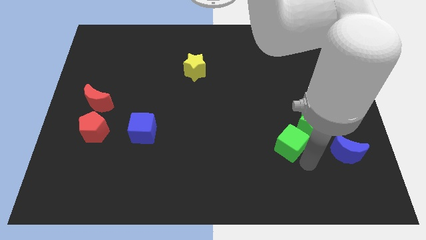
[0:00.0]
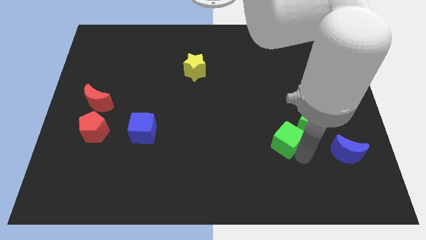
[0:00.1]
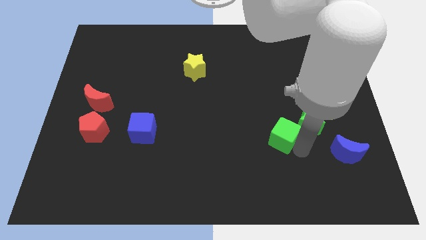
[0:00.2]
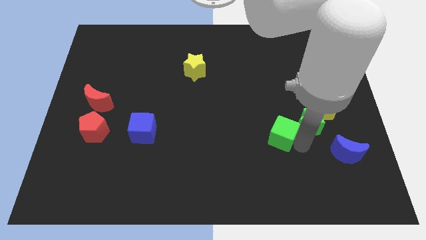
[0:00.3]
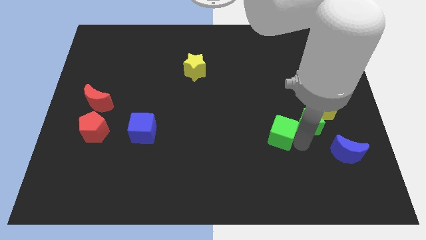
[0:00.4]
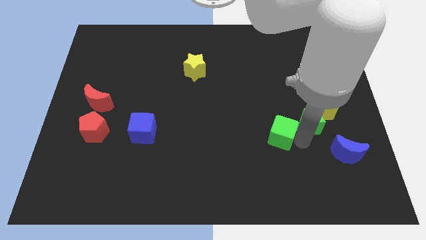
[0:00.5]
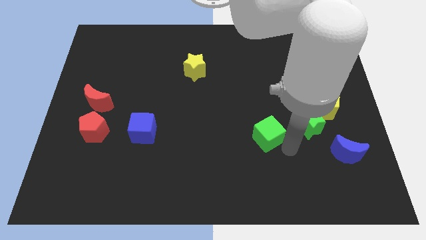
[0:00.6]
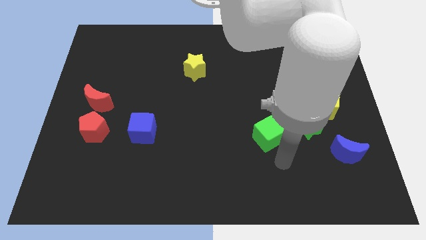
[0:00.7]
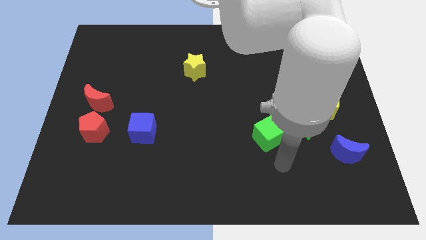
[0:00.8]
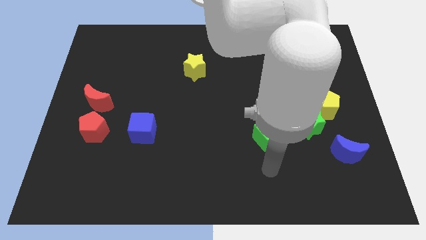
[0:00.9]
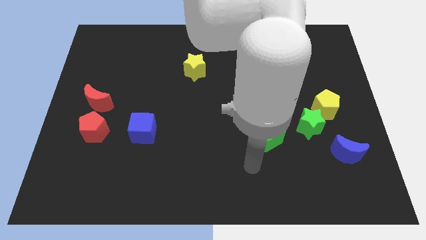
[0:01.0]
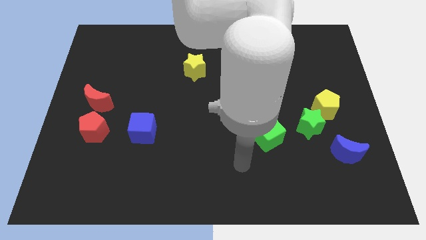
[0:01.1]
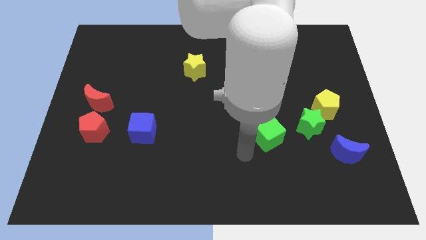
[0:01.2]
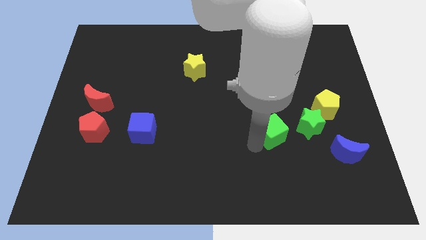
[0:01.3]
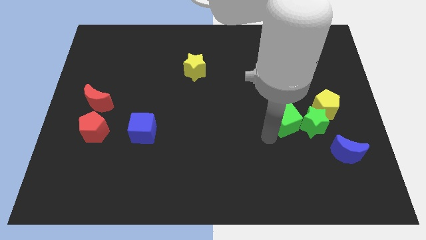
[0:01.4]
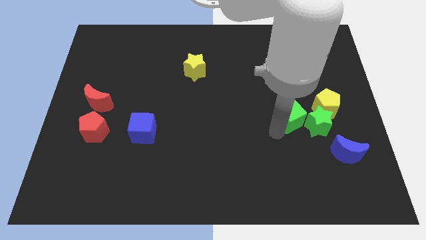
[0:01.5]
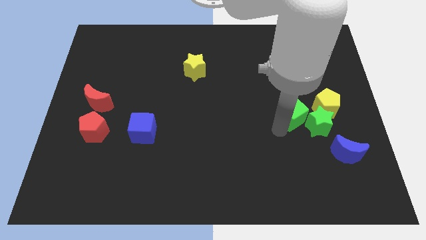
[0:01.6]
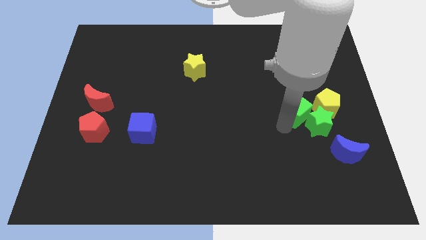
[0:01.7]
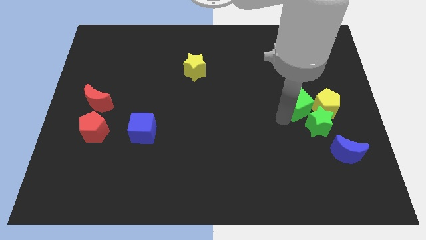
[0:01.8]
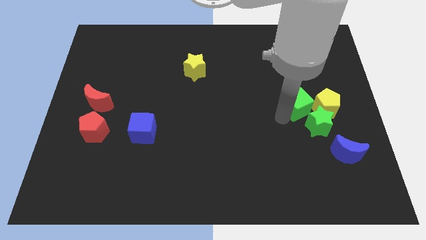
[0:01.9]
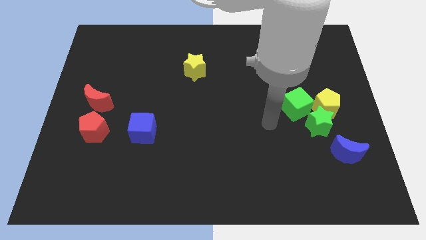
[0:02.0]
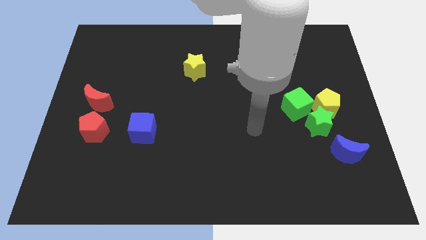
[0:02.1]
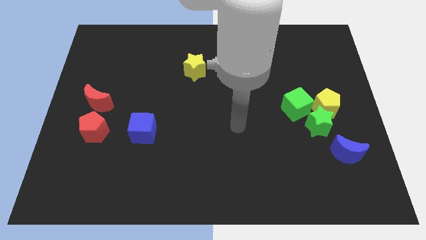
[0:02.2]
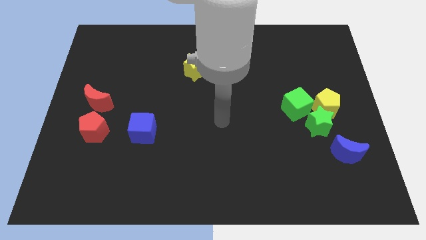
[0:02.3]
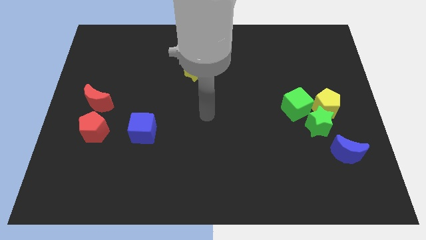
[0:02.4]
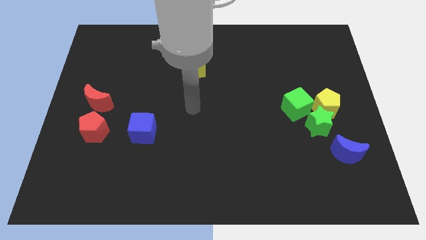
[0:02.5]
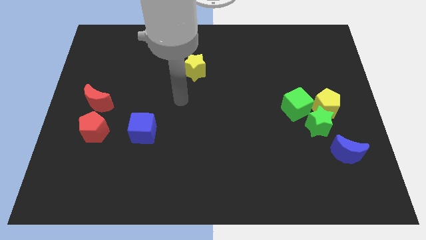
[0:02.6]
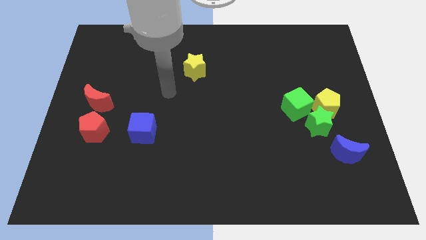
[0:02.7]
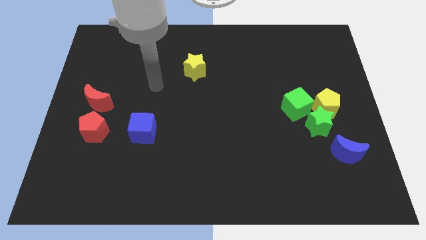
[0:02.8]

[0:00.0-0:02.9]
move green cube left above the green star

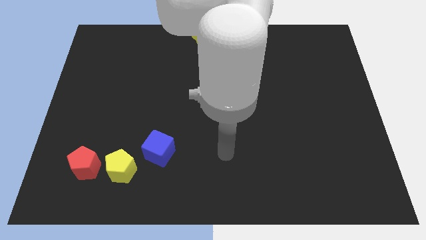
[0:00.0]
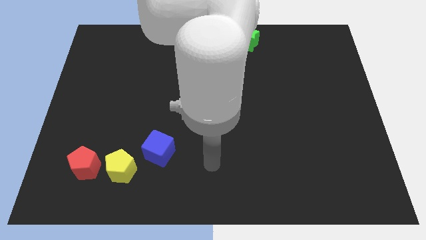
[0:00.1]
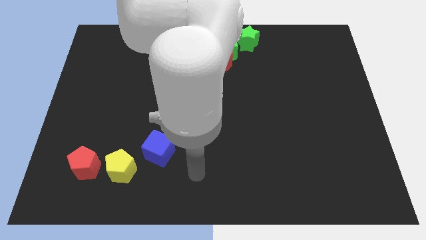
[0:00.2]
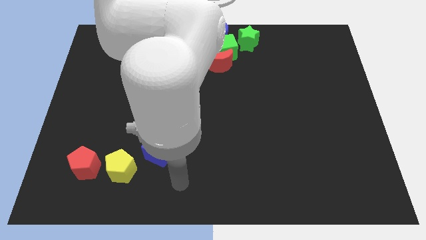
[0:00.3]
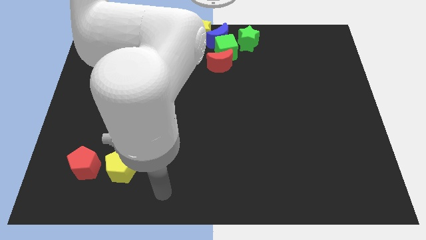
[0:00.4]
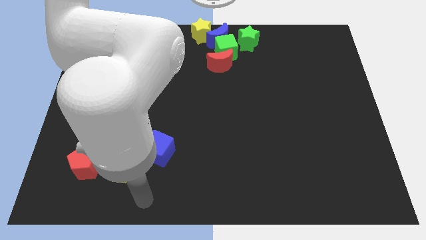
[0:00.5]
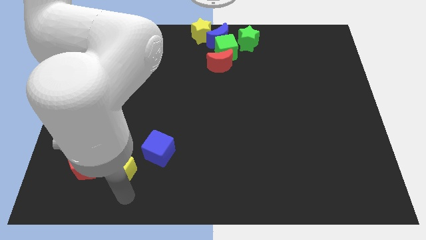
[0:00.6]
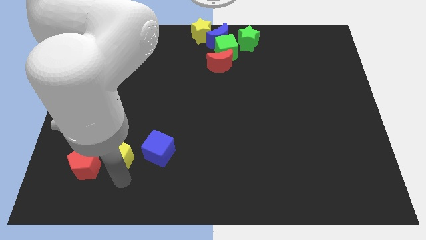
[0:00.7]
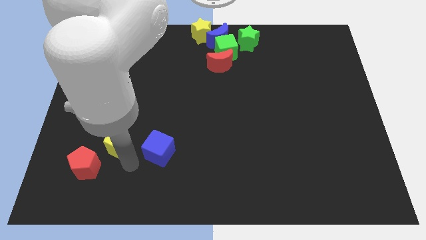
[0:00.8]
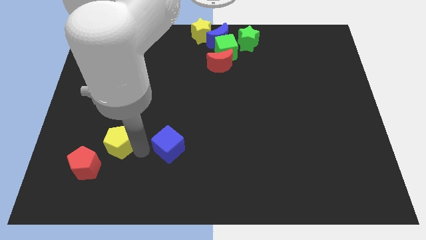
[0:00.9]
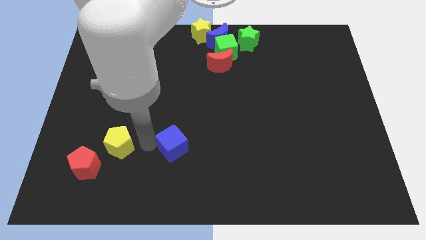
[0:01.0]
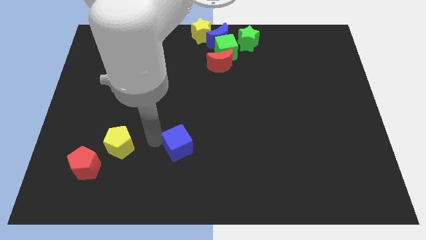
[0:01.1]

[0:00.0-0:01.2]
slightly move the yellow pentagon towards up

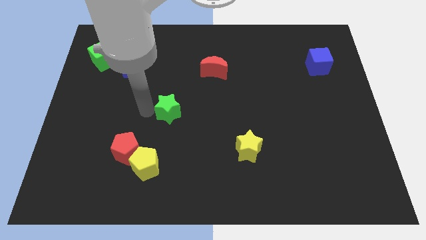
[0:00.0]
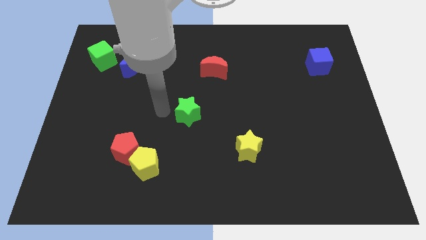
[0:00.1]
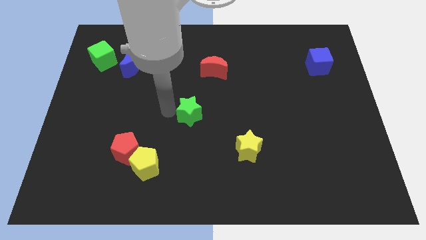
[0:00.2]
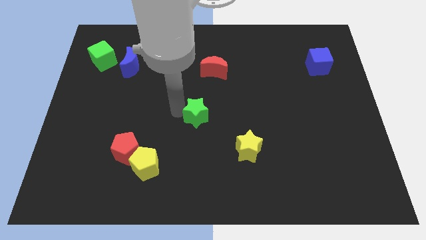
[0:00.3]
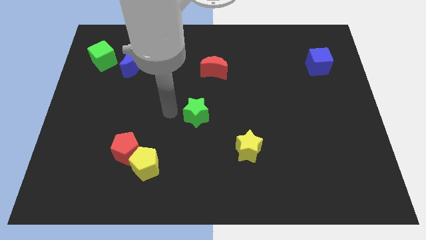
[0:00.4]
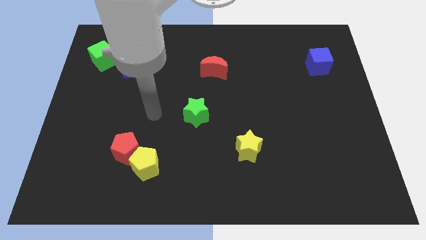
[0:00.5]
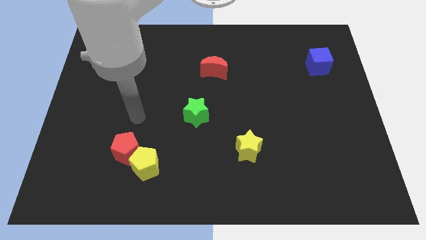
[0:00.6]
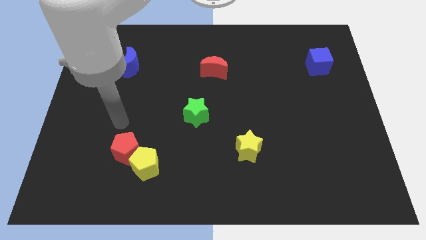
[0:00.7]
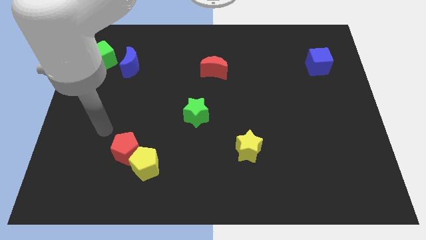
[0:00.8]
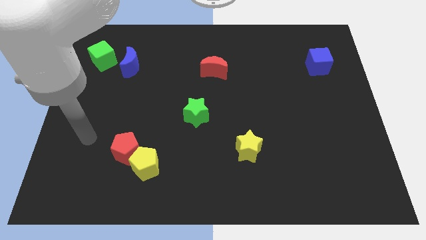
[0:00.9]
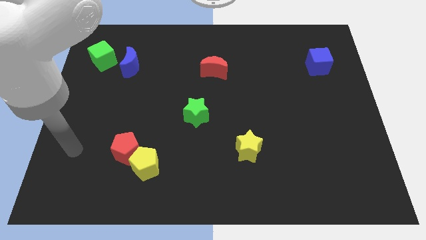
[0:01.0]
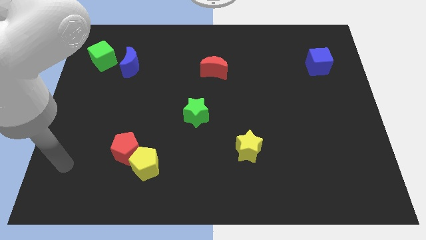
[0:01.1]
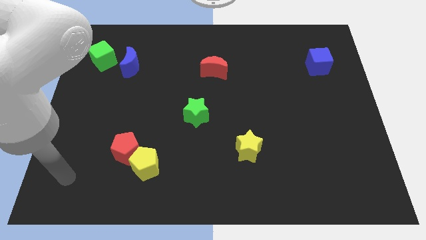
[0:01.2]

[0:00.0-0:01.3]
push the green star slightly towards the center of the board

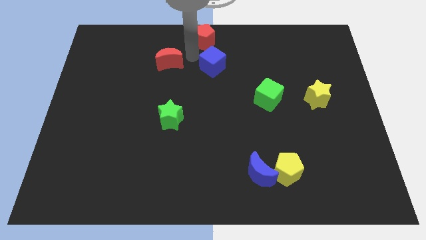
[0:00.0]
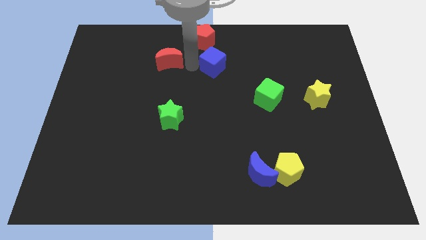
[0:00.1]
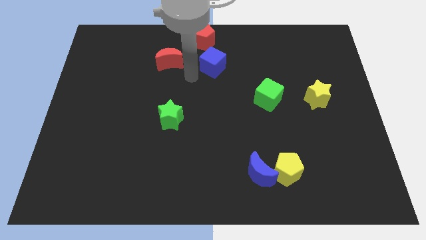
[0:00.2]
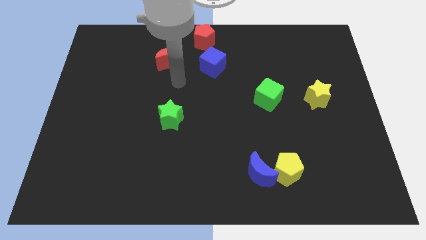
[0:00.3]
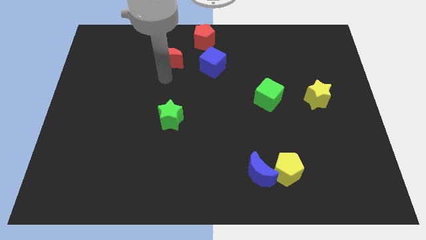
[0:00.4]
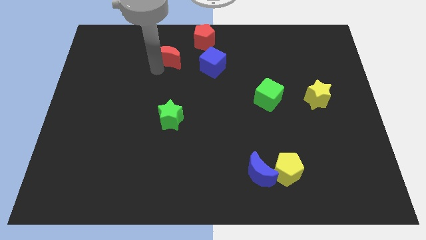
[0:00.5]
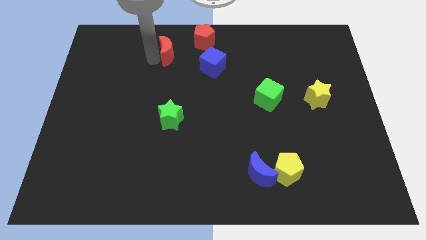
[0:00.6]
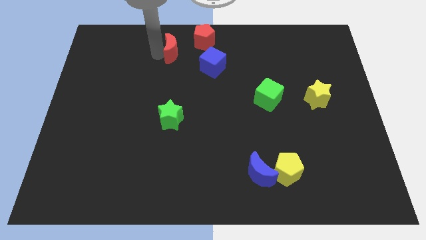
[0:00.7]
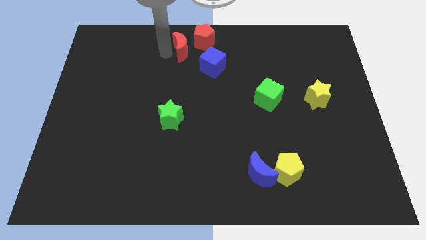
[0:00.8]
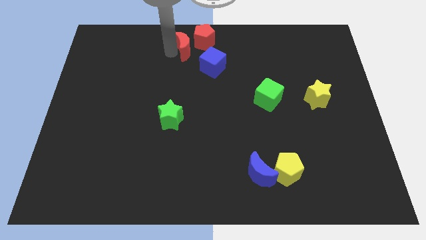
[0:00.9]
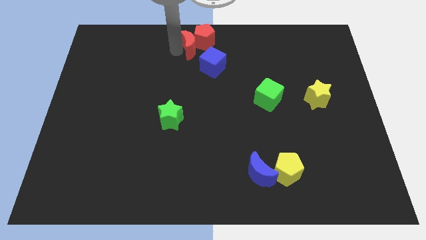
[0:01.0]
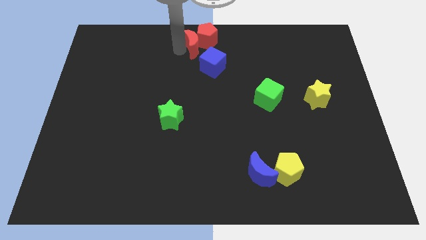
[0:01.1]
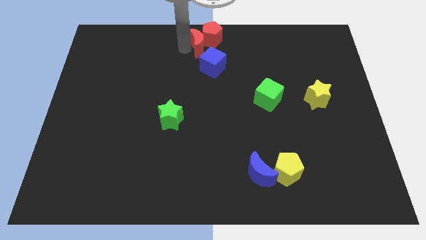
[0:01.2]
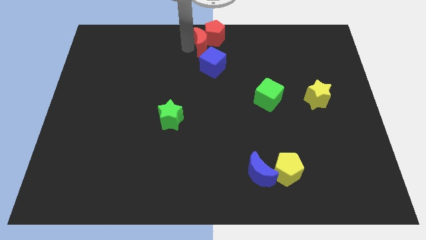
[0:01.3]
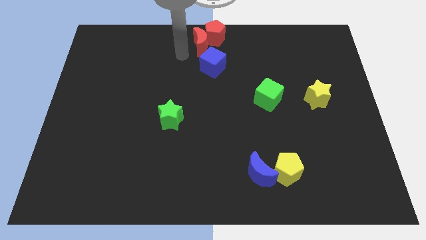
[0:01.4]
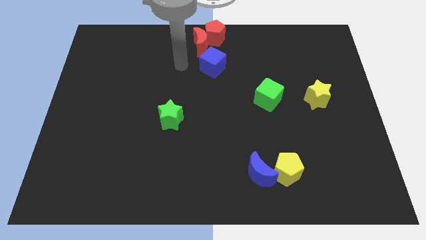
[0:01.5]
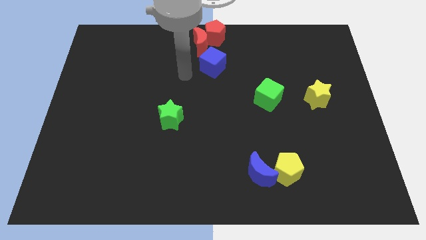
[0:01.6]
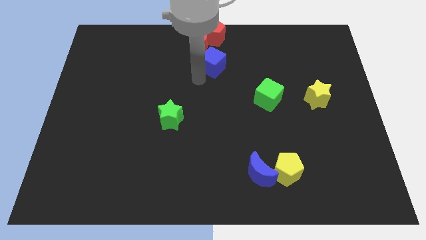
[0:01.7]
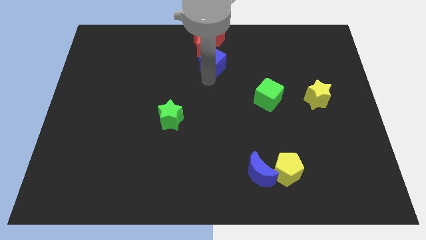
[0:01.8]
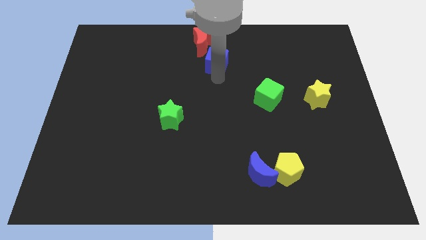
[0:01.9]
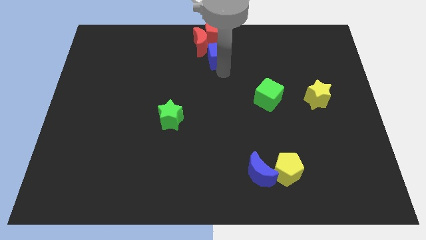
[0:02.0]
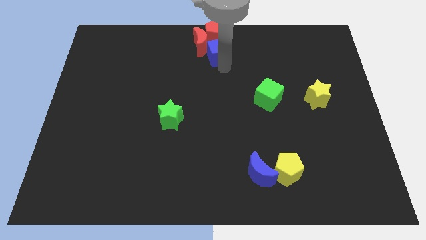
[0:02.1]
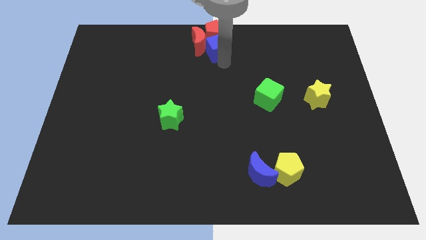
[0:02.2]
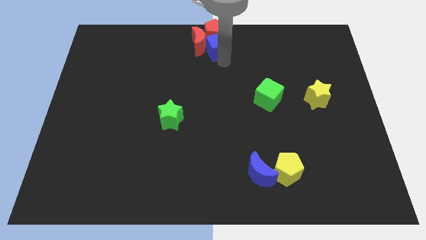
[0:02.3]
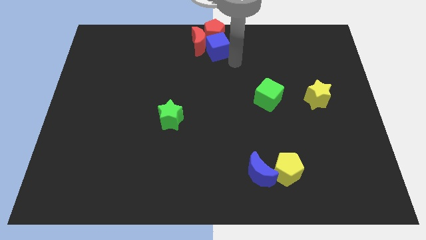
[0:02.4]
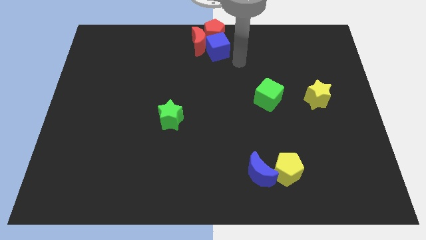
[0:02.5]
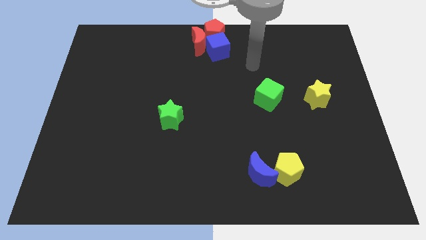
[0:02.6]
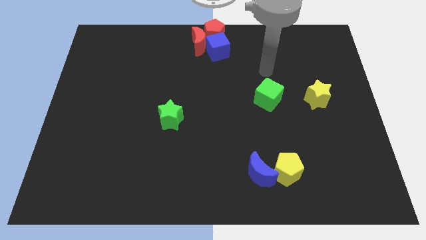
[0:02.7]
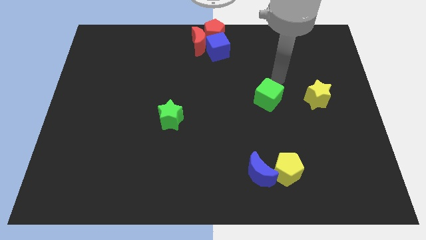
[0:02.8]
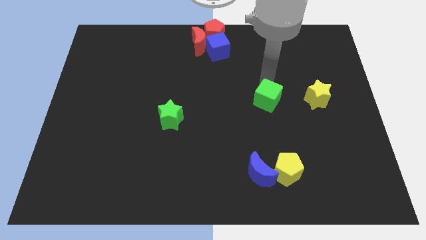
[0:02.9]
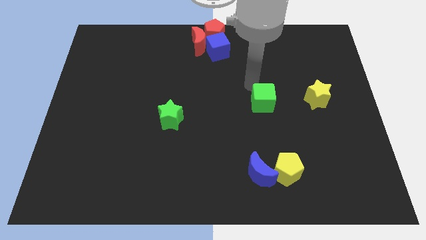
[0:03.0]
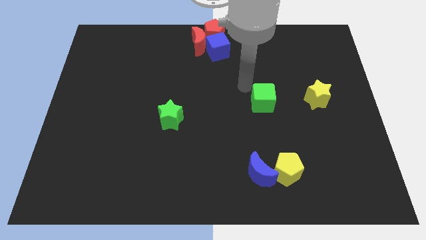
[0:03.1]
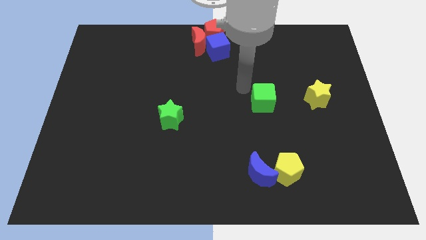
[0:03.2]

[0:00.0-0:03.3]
group up the two red blocks

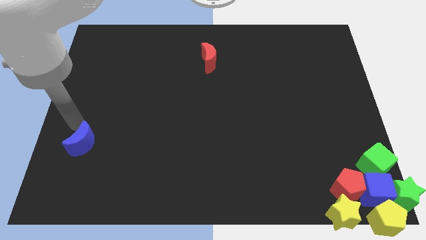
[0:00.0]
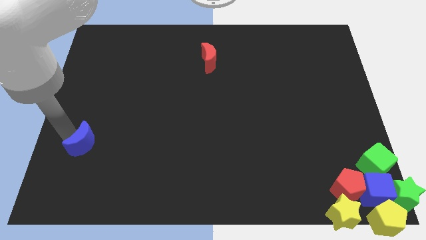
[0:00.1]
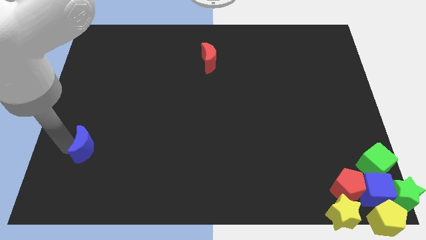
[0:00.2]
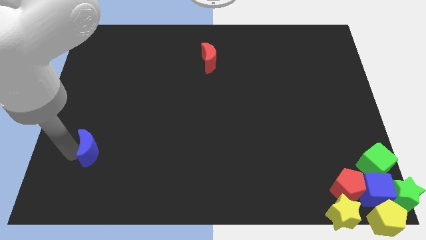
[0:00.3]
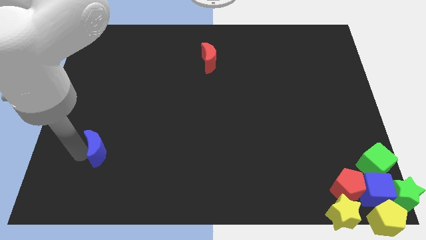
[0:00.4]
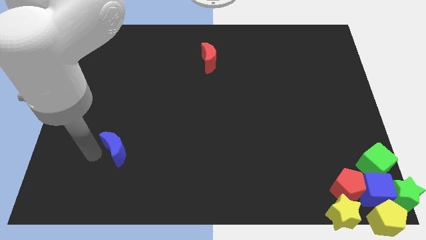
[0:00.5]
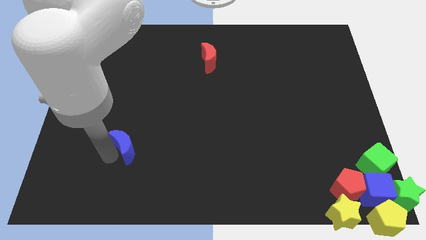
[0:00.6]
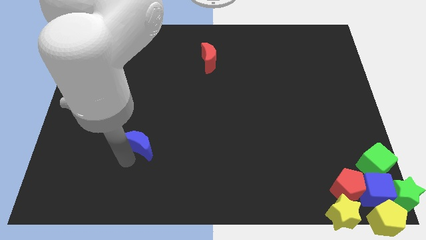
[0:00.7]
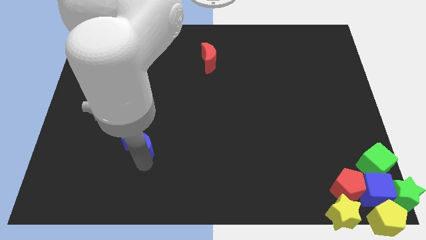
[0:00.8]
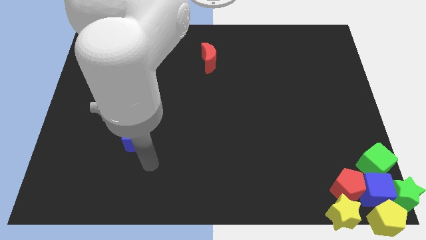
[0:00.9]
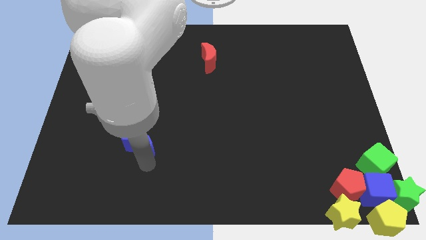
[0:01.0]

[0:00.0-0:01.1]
move the blue crescent to the right of the board
